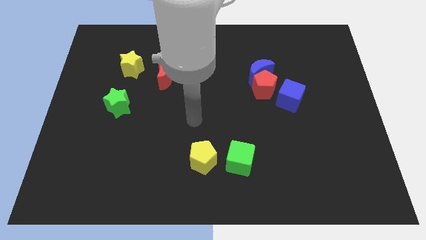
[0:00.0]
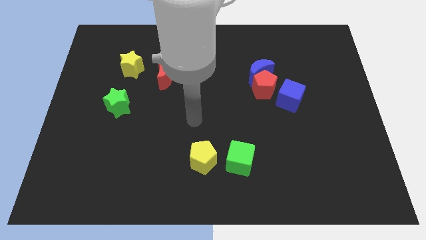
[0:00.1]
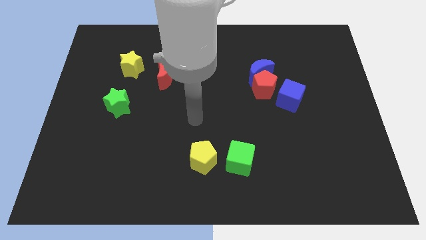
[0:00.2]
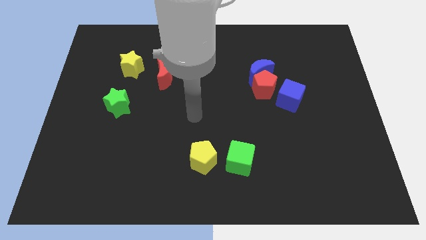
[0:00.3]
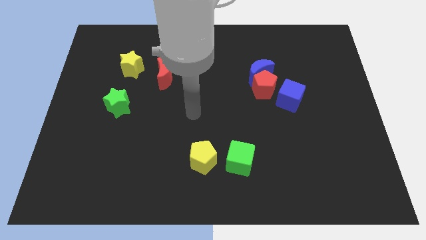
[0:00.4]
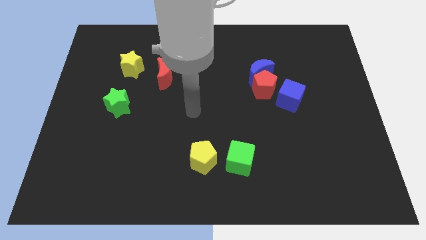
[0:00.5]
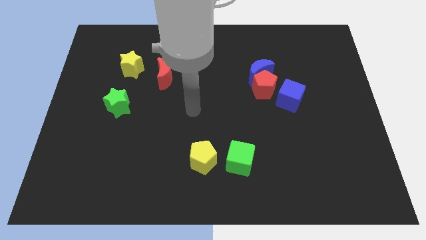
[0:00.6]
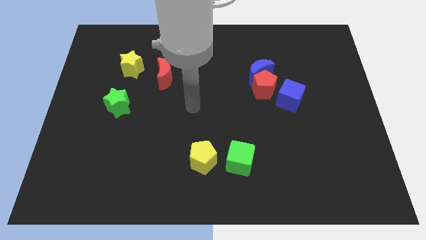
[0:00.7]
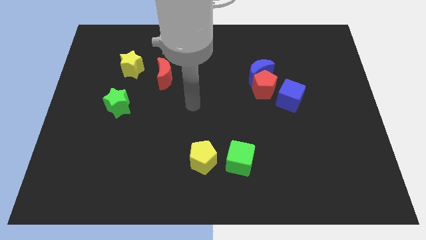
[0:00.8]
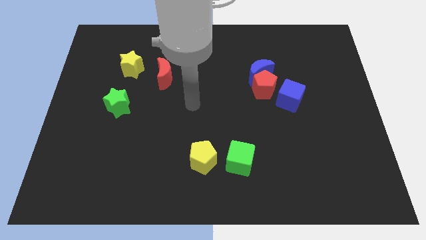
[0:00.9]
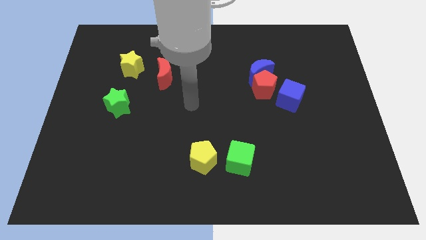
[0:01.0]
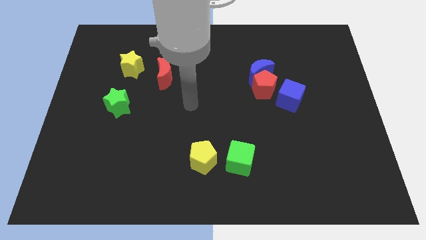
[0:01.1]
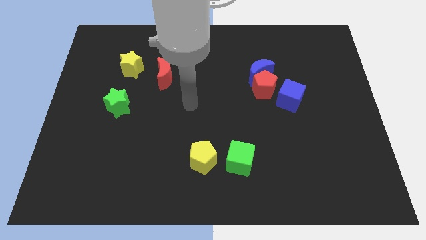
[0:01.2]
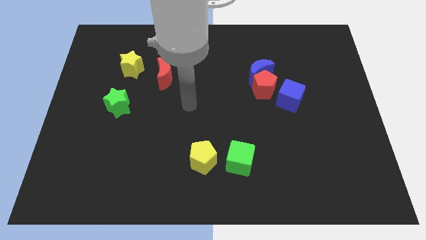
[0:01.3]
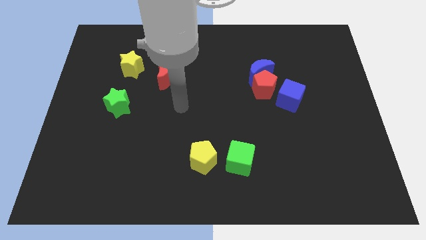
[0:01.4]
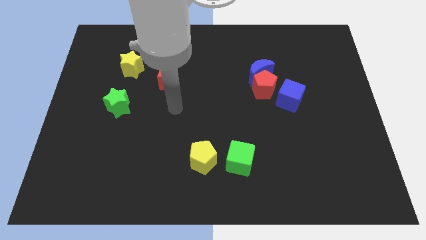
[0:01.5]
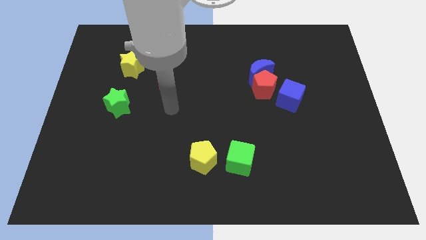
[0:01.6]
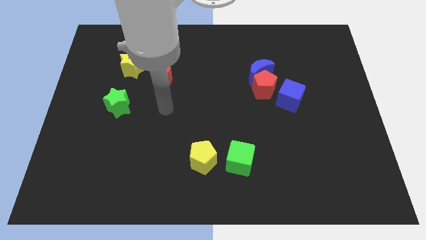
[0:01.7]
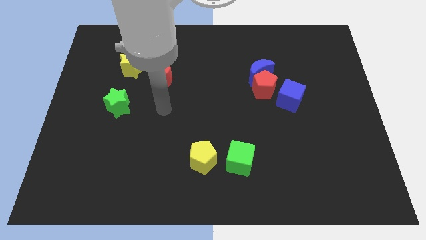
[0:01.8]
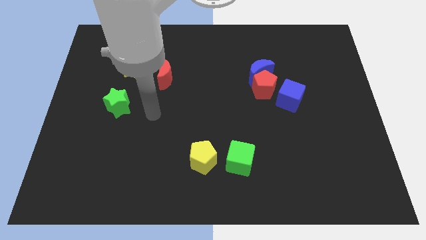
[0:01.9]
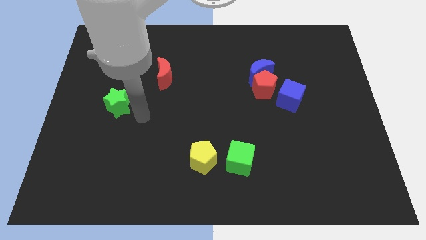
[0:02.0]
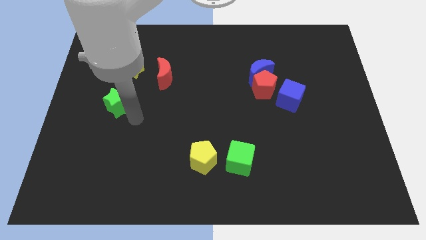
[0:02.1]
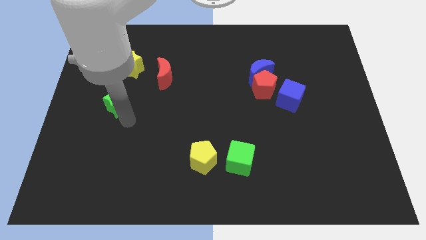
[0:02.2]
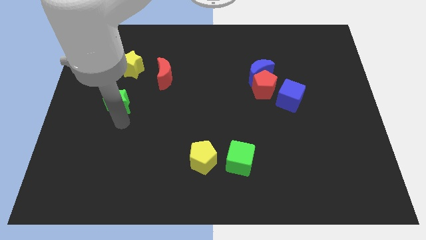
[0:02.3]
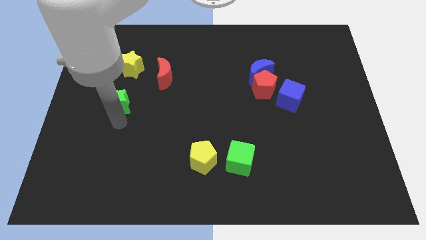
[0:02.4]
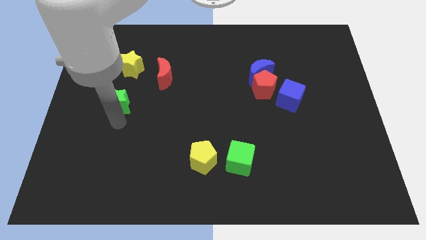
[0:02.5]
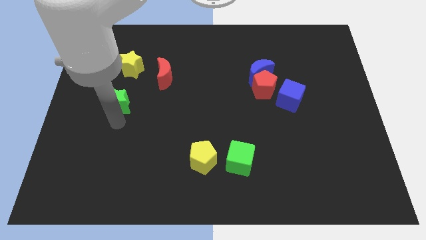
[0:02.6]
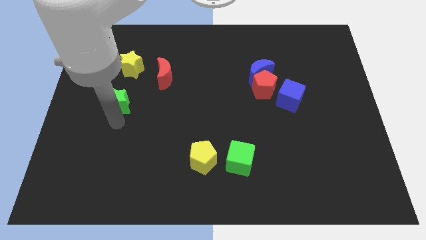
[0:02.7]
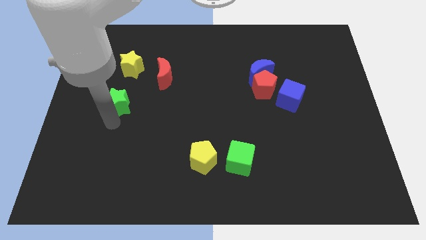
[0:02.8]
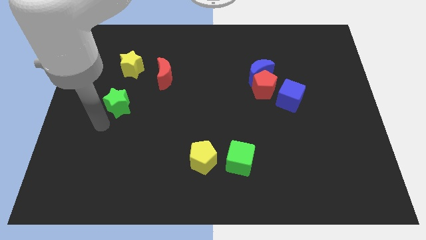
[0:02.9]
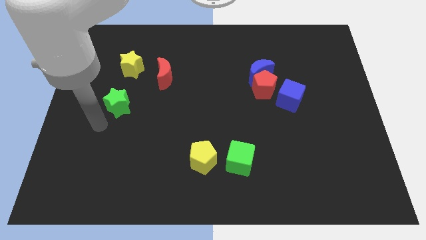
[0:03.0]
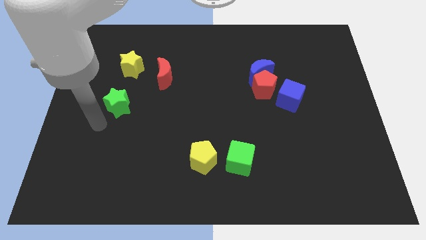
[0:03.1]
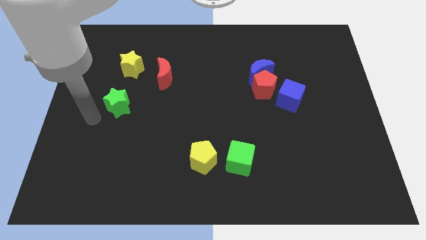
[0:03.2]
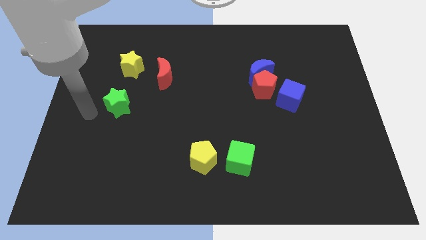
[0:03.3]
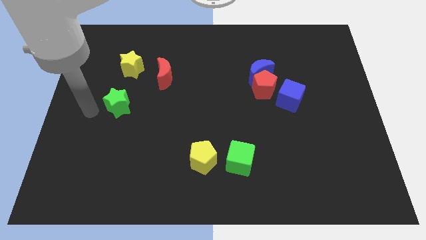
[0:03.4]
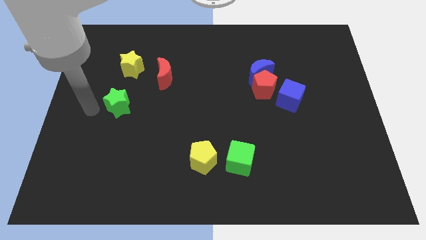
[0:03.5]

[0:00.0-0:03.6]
place your arm parallel to the green star

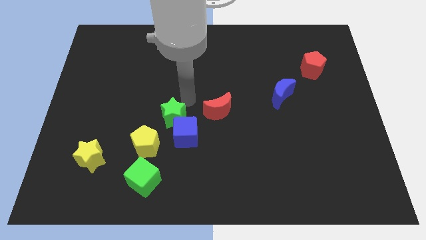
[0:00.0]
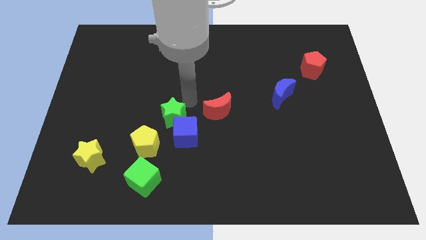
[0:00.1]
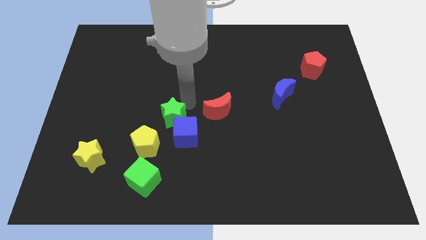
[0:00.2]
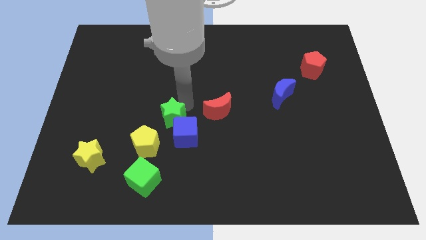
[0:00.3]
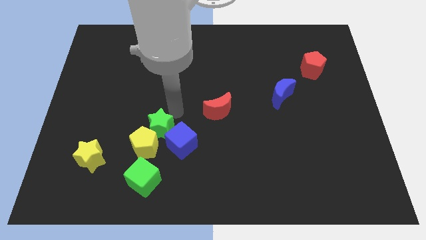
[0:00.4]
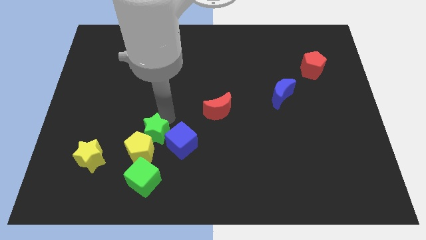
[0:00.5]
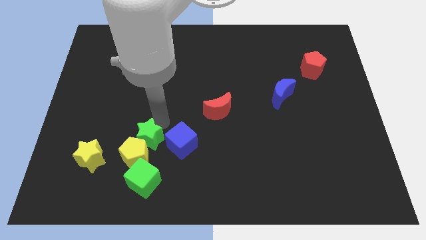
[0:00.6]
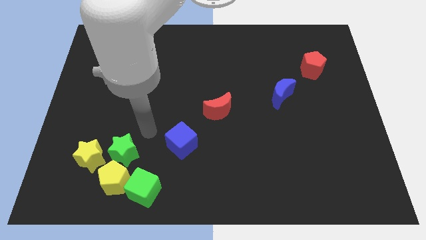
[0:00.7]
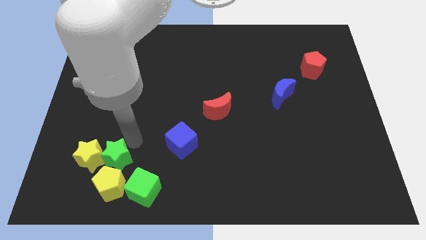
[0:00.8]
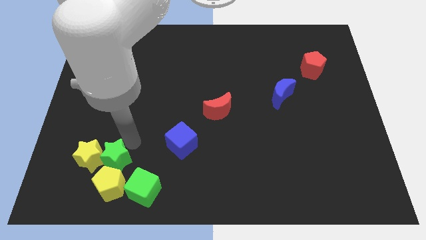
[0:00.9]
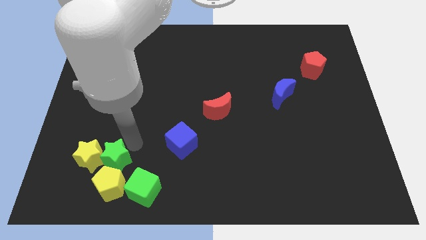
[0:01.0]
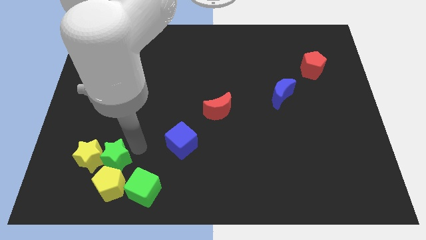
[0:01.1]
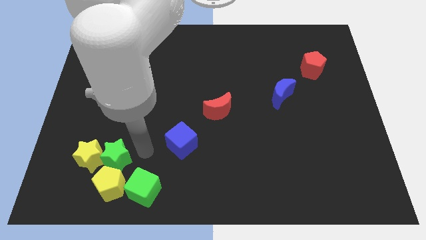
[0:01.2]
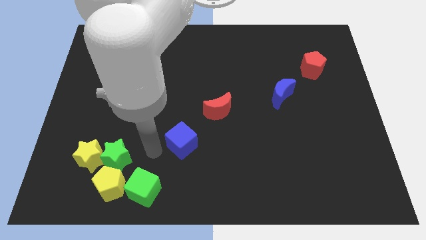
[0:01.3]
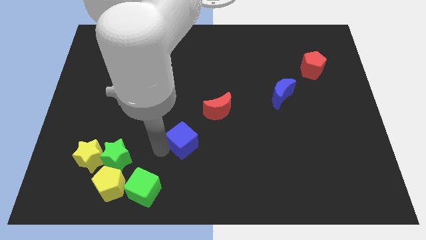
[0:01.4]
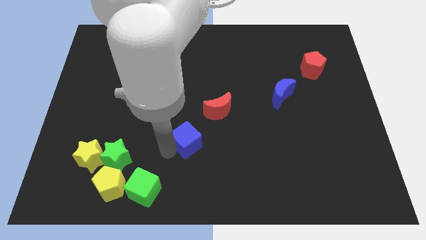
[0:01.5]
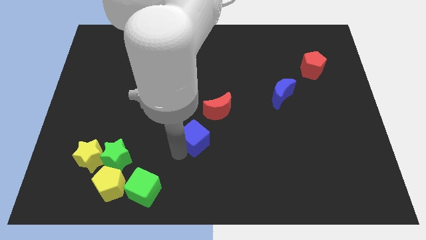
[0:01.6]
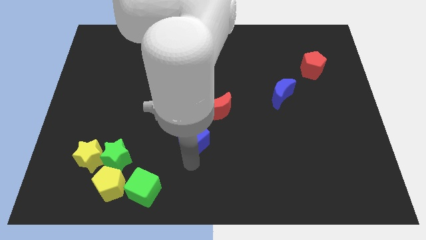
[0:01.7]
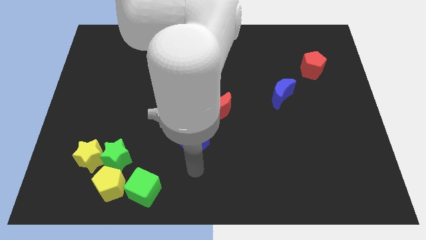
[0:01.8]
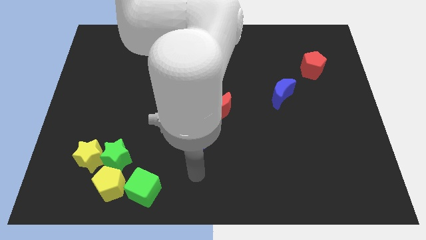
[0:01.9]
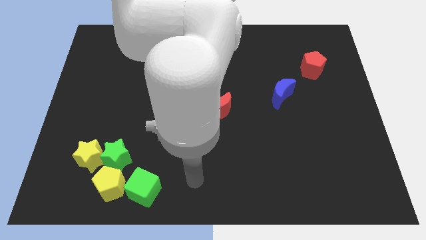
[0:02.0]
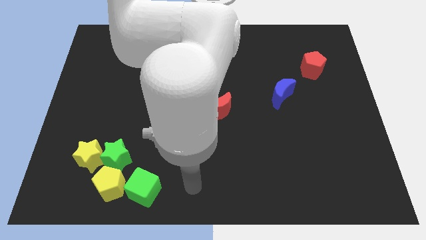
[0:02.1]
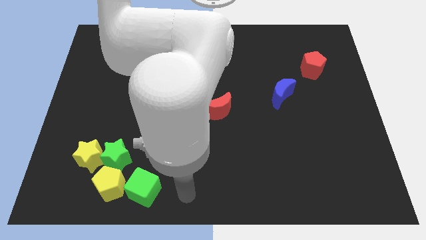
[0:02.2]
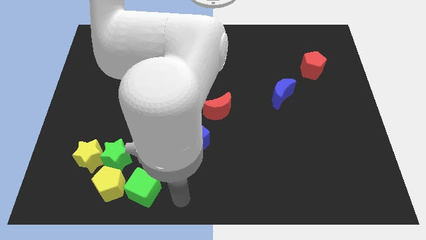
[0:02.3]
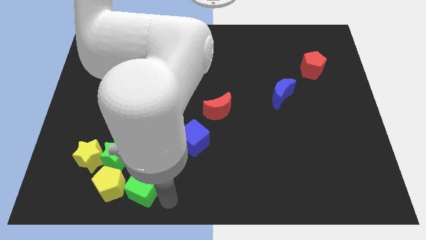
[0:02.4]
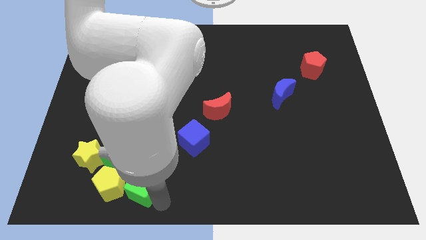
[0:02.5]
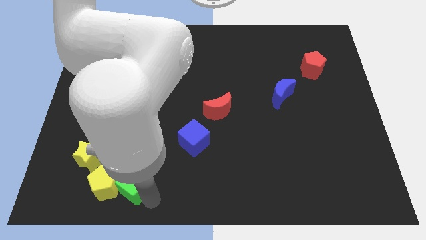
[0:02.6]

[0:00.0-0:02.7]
move the green star towards the yellow pentagon

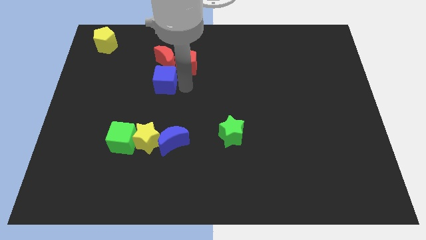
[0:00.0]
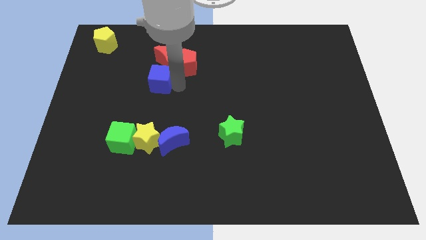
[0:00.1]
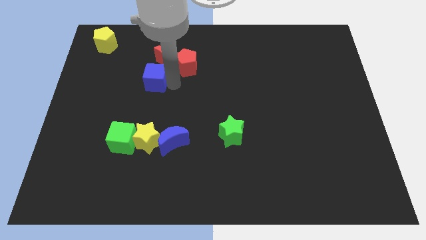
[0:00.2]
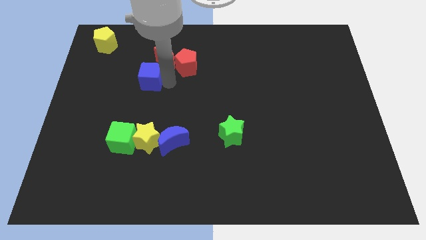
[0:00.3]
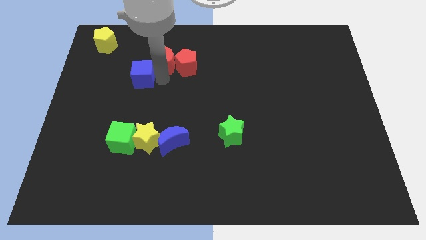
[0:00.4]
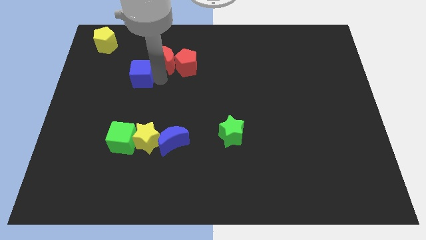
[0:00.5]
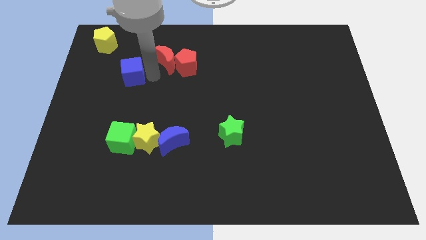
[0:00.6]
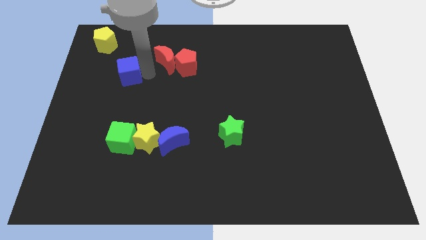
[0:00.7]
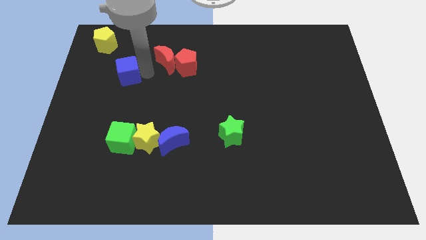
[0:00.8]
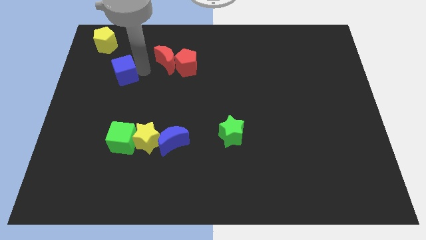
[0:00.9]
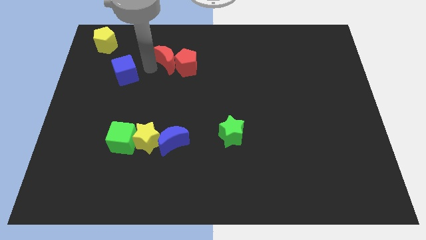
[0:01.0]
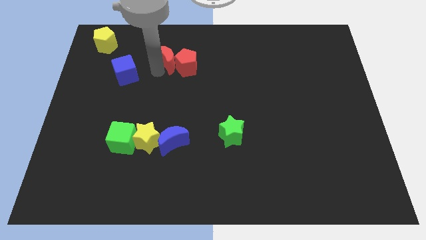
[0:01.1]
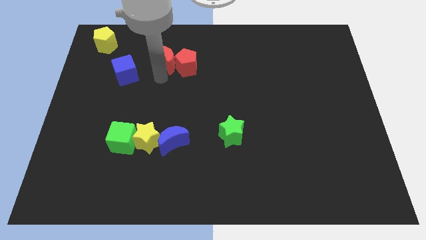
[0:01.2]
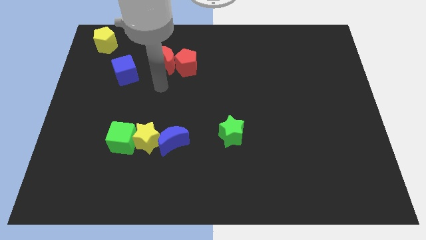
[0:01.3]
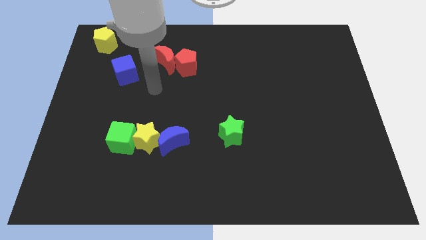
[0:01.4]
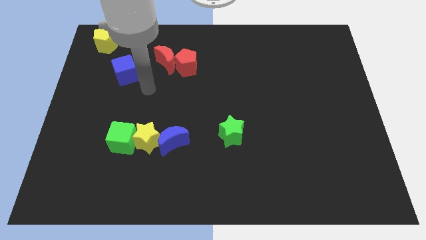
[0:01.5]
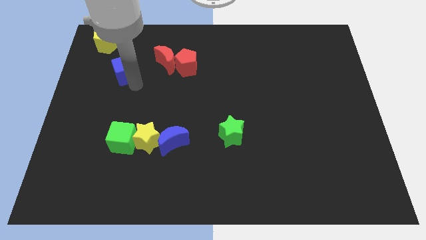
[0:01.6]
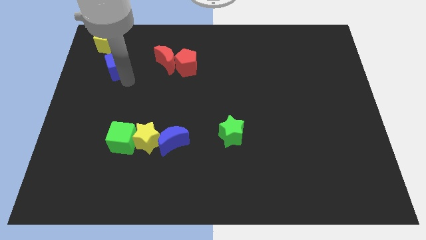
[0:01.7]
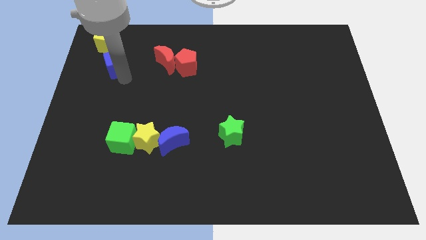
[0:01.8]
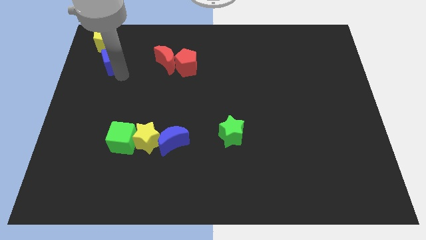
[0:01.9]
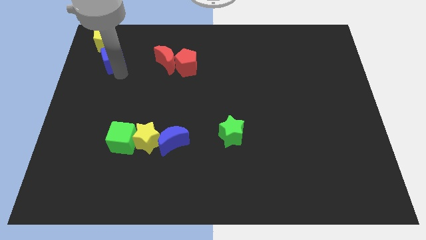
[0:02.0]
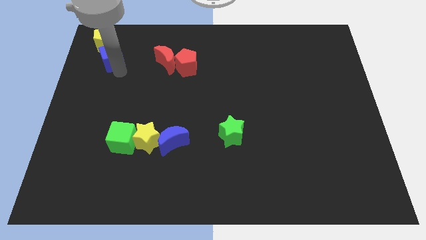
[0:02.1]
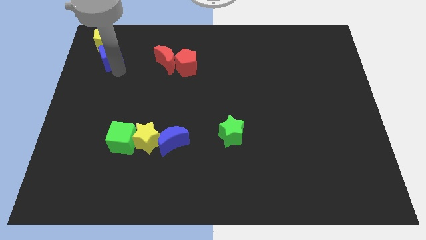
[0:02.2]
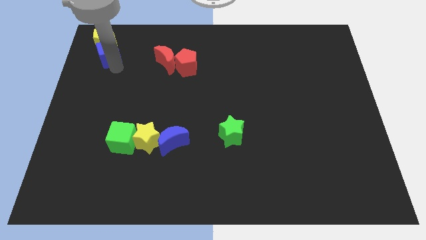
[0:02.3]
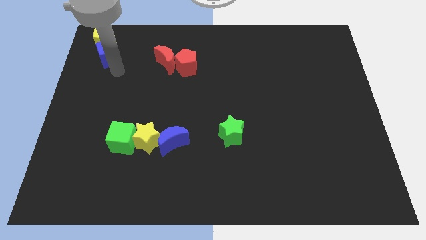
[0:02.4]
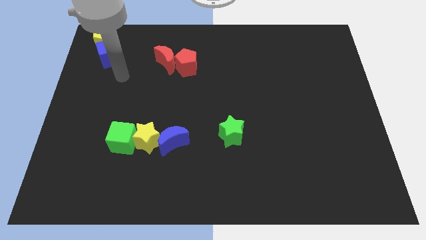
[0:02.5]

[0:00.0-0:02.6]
push the blue cube into the yellow pentagon

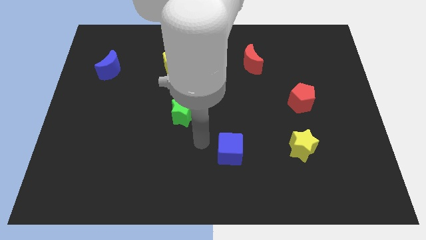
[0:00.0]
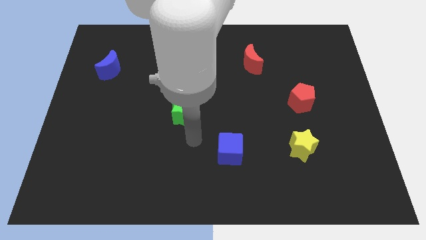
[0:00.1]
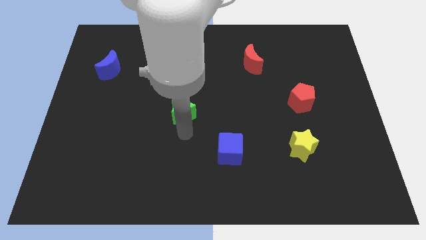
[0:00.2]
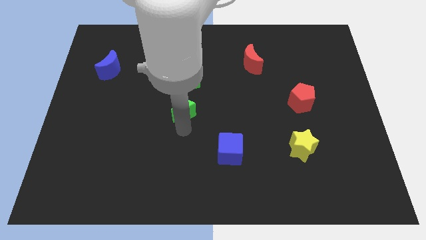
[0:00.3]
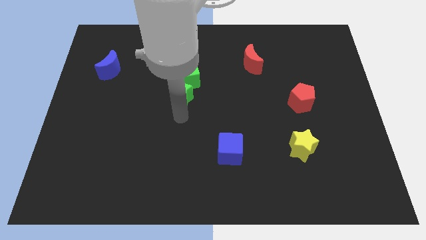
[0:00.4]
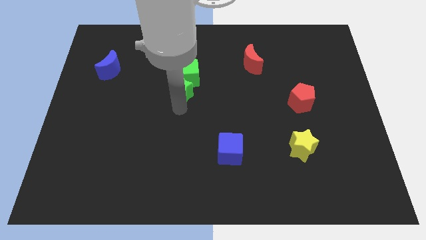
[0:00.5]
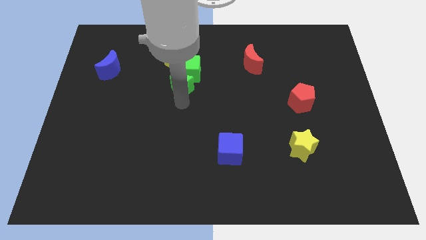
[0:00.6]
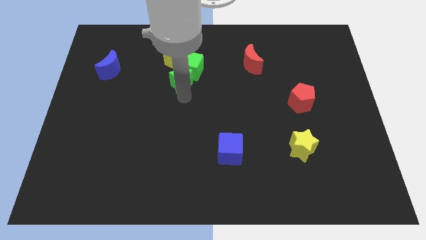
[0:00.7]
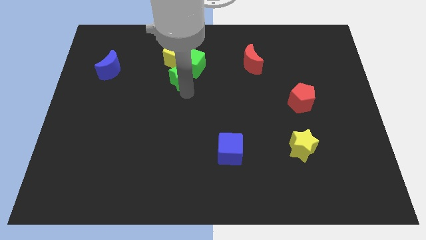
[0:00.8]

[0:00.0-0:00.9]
place the green star to the bottom of the green cube
